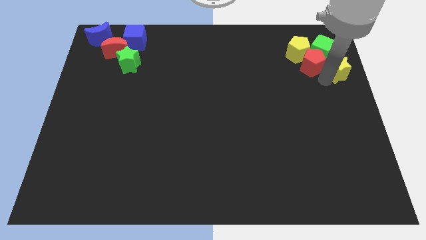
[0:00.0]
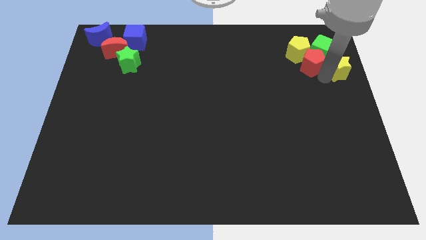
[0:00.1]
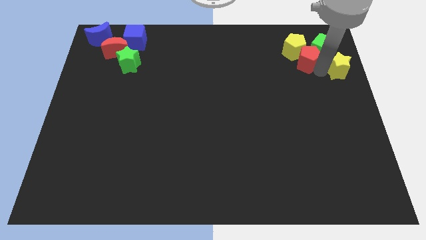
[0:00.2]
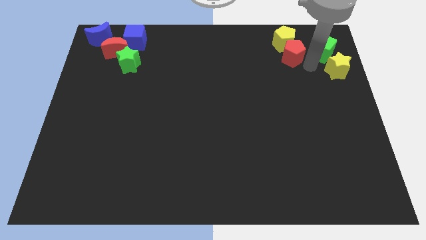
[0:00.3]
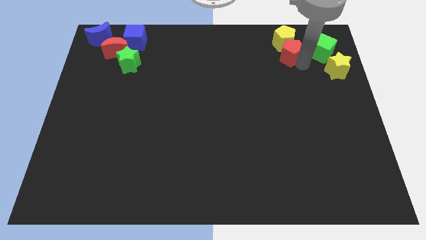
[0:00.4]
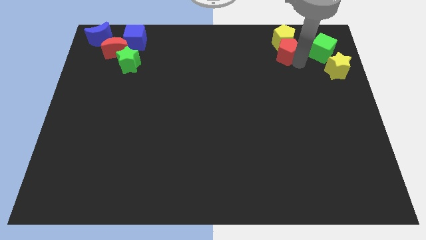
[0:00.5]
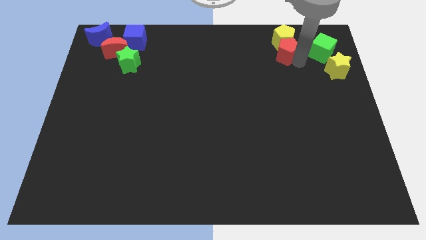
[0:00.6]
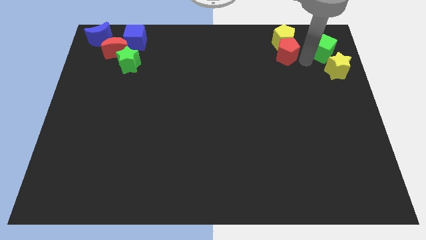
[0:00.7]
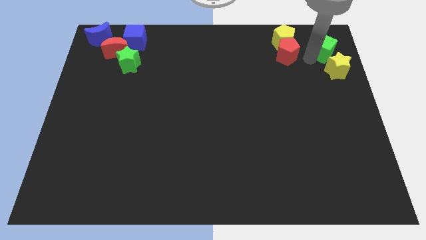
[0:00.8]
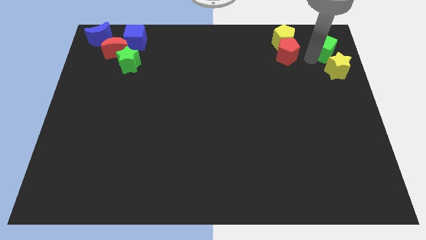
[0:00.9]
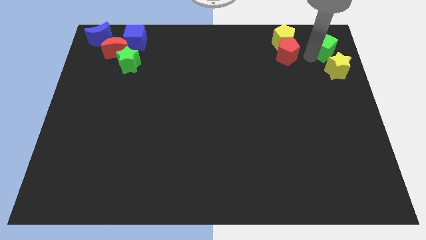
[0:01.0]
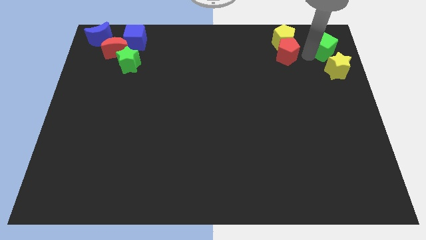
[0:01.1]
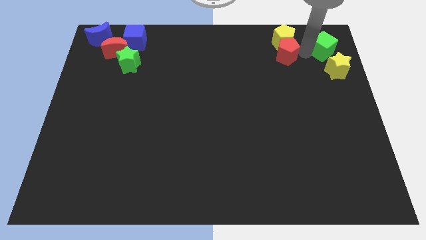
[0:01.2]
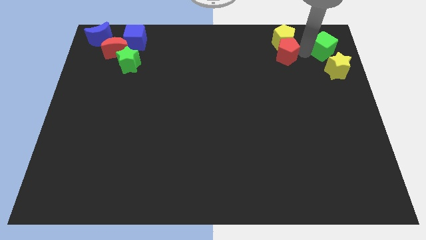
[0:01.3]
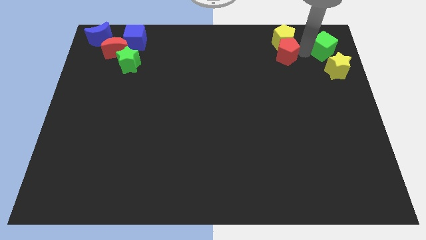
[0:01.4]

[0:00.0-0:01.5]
push red and yellow pentagon towards up

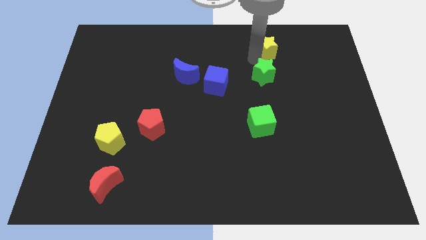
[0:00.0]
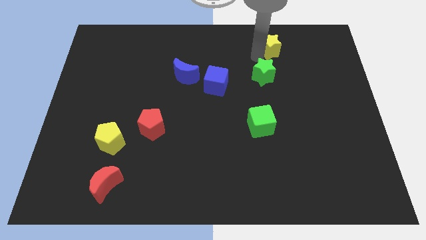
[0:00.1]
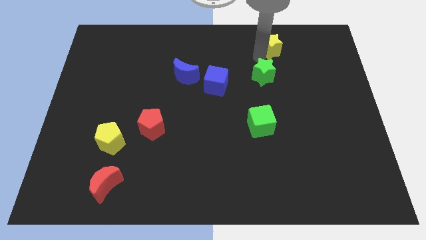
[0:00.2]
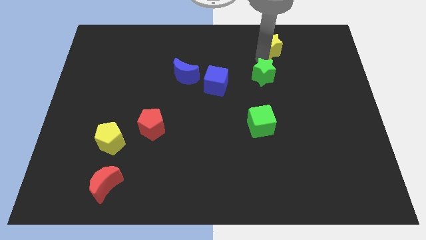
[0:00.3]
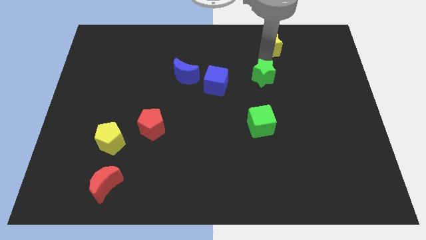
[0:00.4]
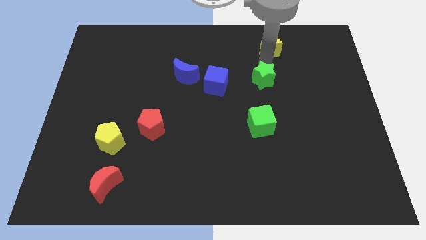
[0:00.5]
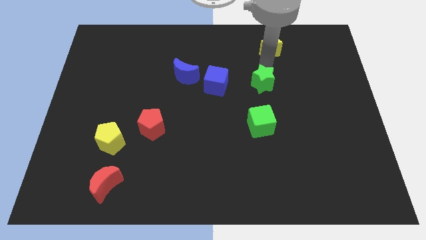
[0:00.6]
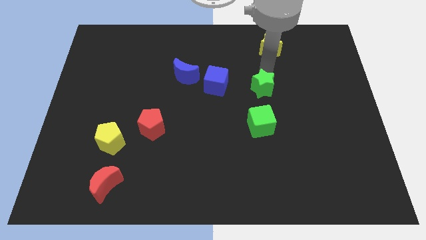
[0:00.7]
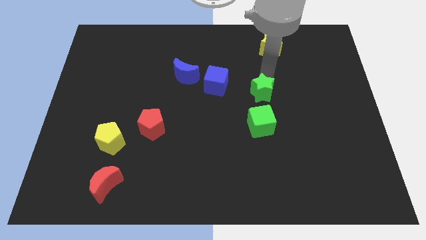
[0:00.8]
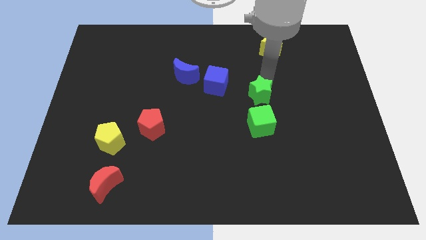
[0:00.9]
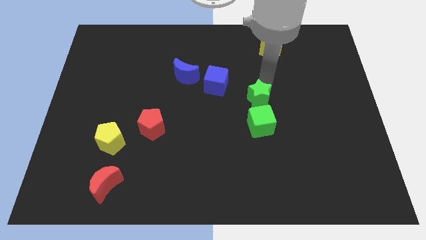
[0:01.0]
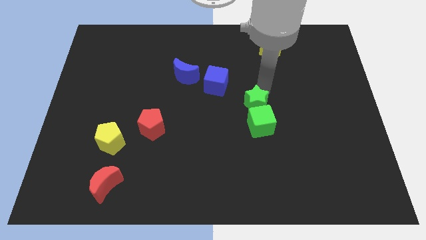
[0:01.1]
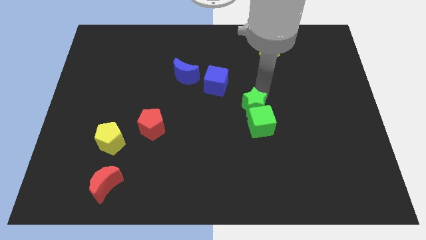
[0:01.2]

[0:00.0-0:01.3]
separate the yellow and green stars

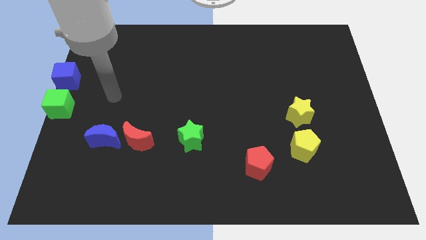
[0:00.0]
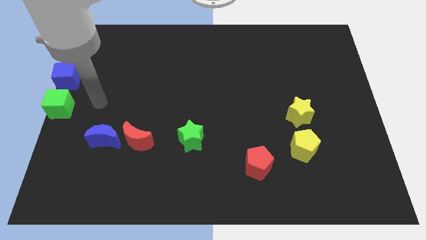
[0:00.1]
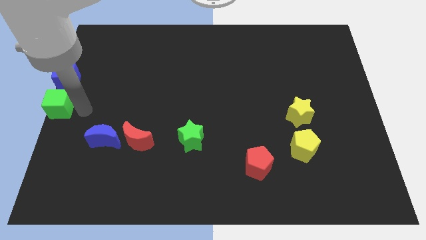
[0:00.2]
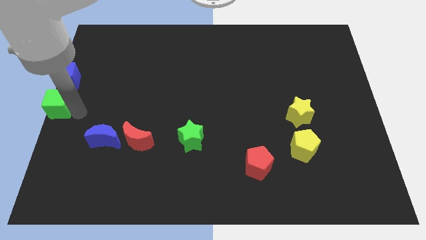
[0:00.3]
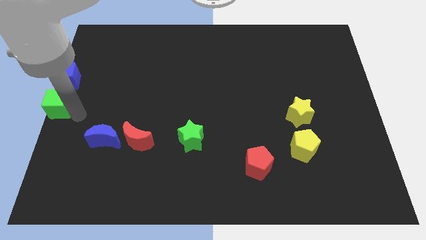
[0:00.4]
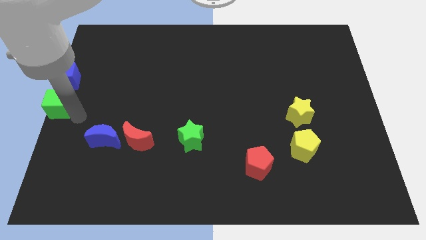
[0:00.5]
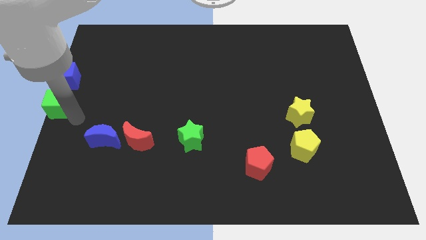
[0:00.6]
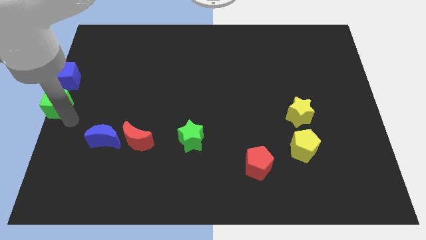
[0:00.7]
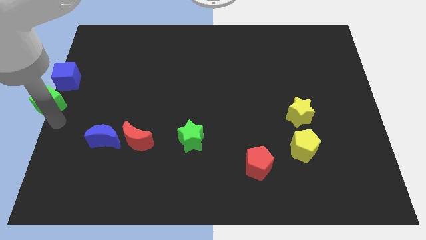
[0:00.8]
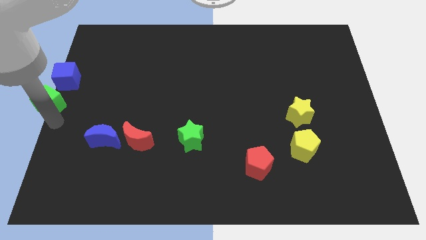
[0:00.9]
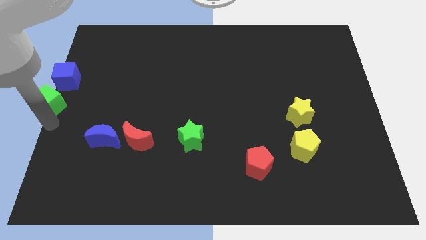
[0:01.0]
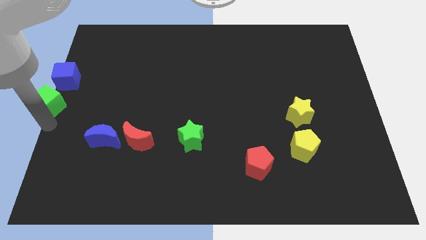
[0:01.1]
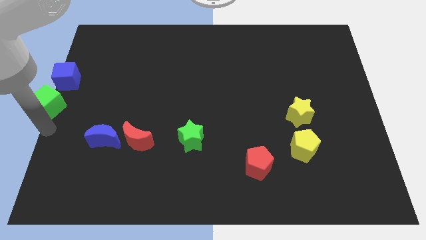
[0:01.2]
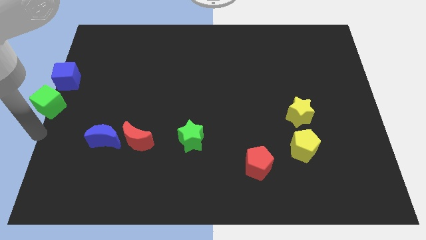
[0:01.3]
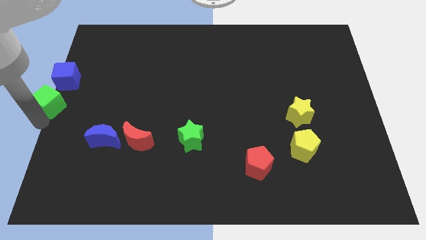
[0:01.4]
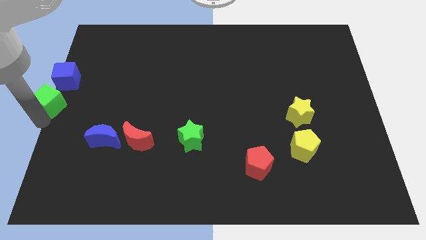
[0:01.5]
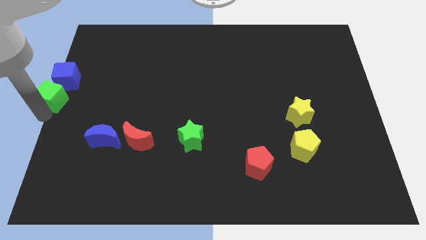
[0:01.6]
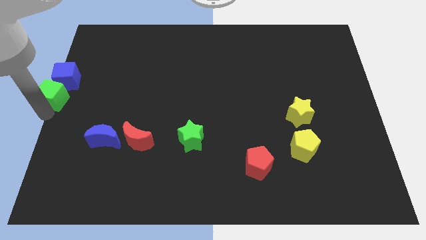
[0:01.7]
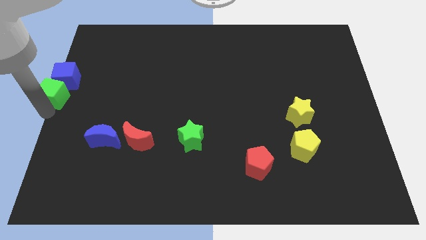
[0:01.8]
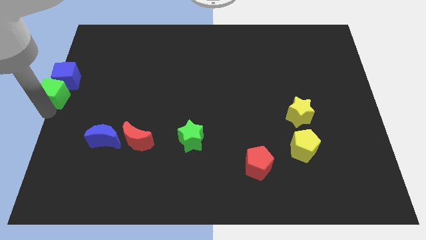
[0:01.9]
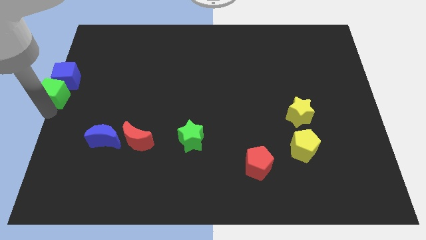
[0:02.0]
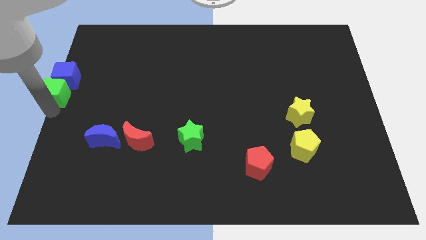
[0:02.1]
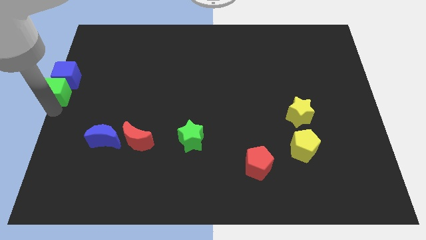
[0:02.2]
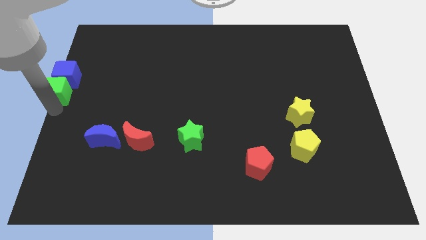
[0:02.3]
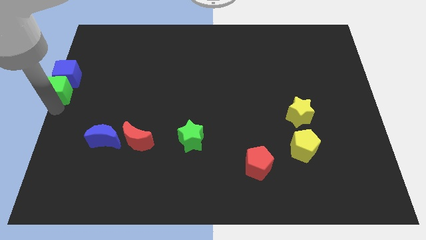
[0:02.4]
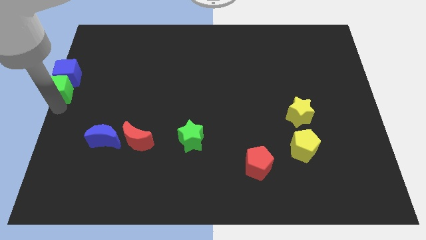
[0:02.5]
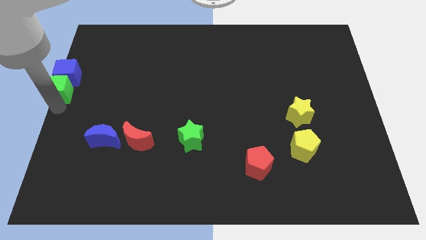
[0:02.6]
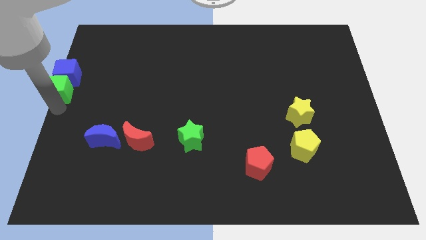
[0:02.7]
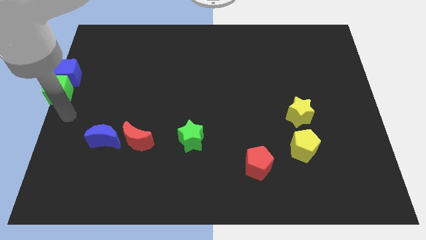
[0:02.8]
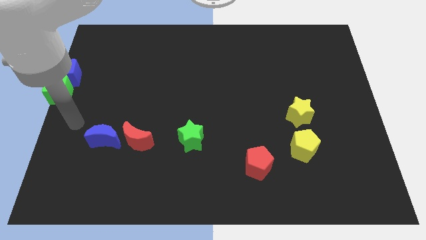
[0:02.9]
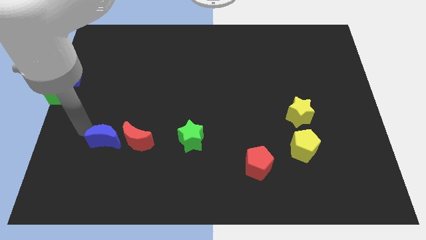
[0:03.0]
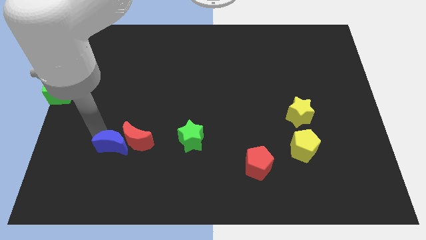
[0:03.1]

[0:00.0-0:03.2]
push the green cube into the blue cube

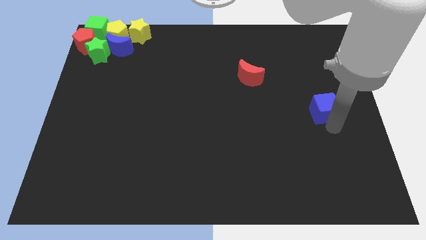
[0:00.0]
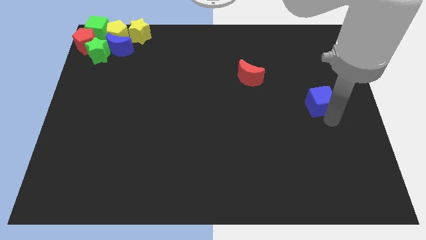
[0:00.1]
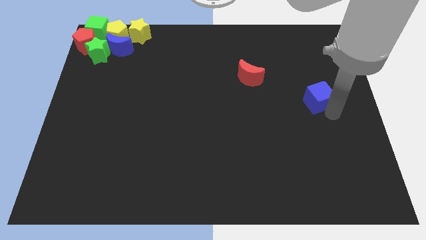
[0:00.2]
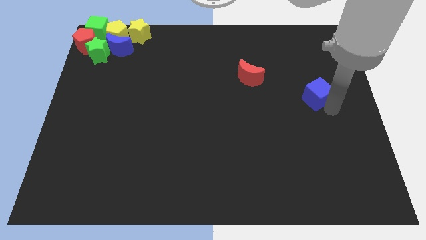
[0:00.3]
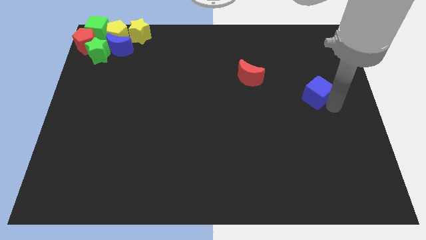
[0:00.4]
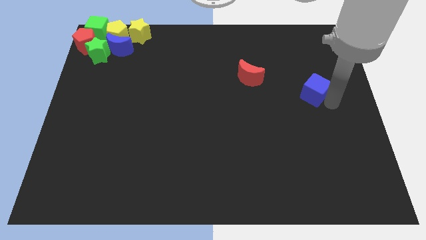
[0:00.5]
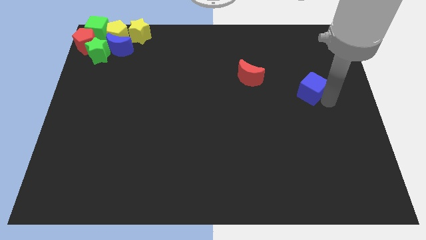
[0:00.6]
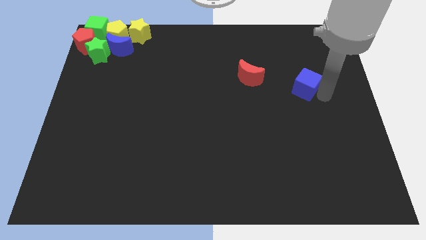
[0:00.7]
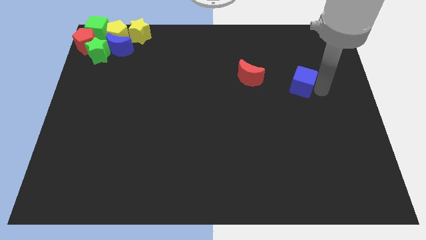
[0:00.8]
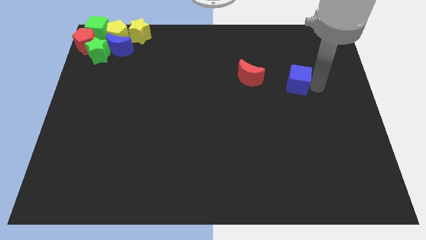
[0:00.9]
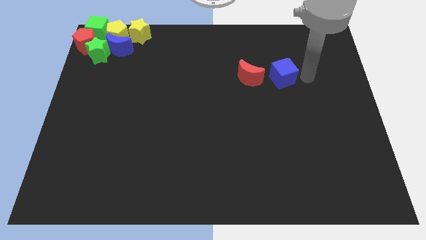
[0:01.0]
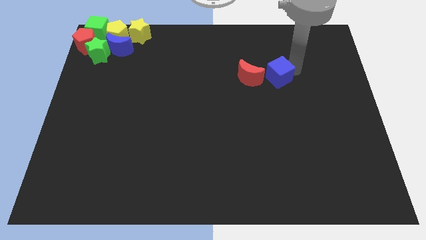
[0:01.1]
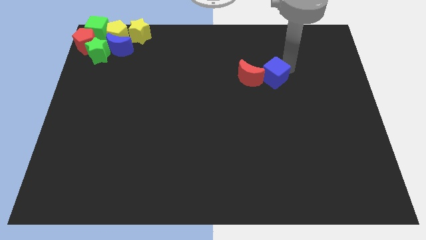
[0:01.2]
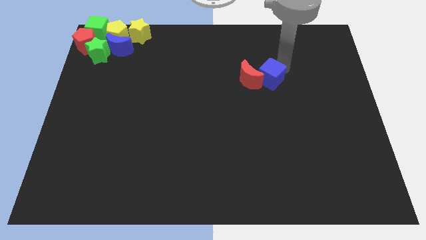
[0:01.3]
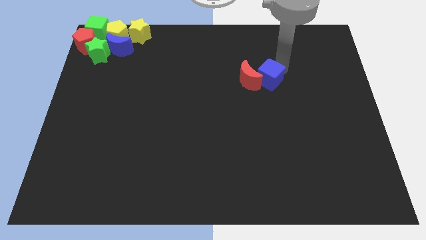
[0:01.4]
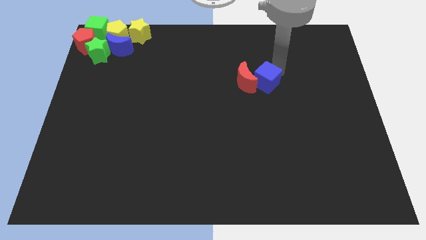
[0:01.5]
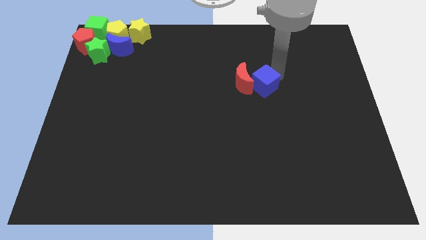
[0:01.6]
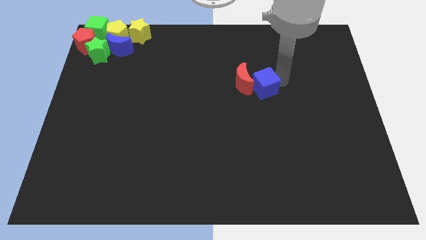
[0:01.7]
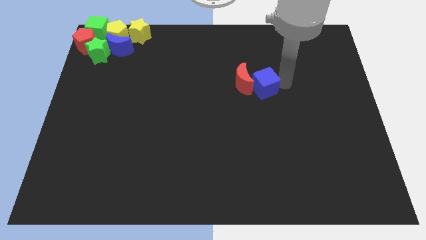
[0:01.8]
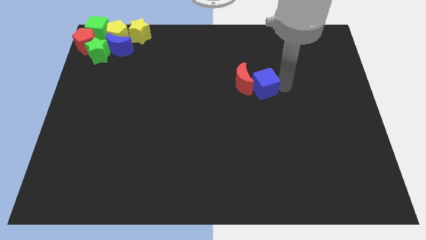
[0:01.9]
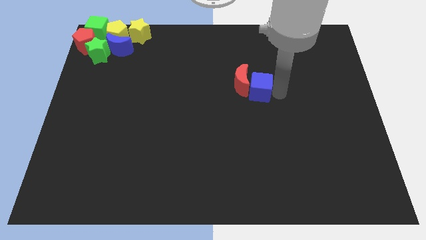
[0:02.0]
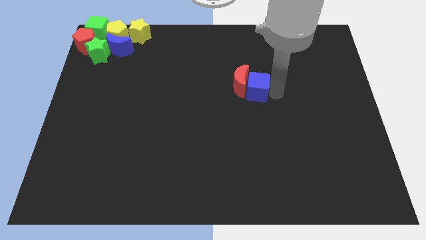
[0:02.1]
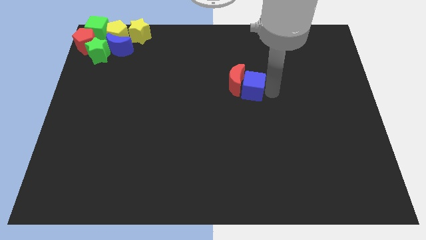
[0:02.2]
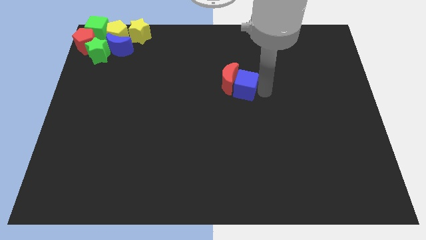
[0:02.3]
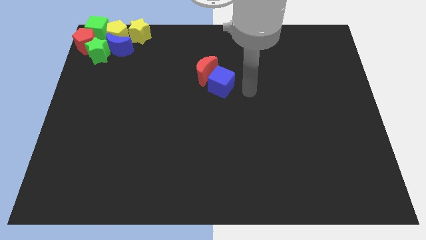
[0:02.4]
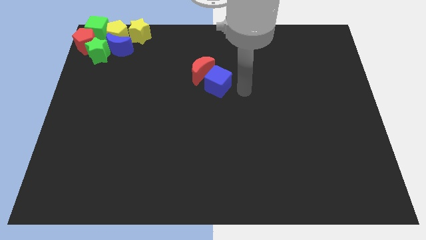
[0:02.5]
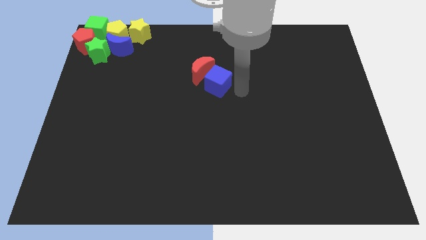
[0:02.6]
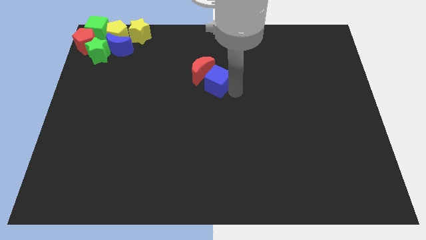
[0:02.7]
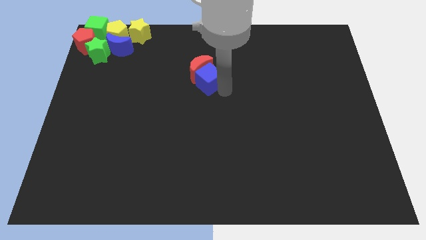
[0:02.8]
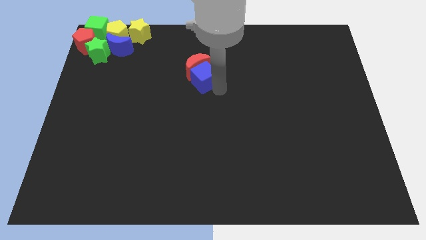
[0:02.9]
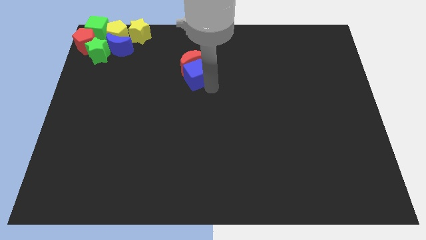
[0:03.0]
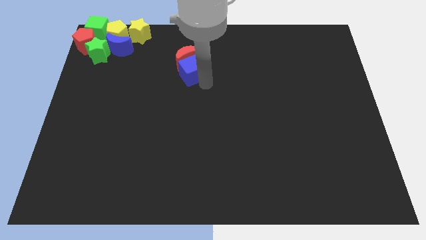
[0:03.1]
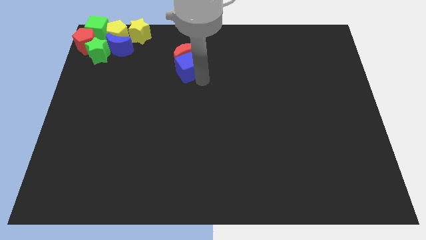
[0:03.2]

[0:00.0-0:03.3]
move blue cube and red moon to the left above cube

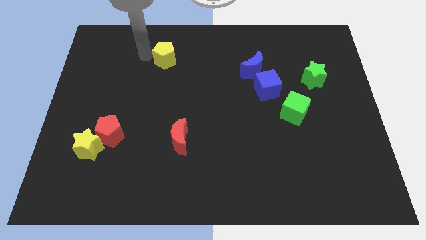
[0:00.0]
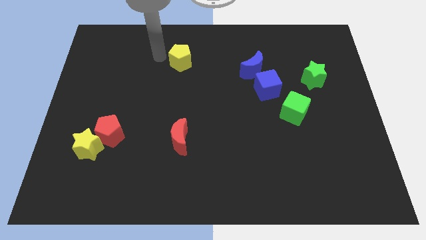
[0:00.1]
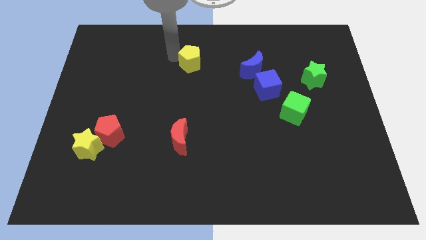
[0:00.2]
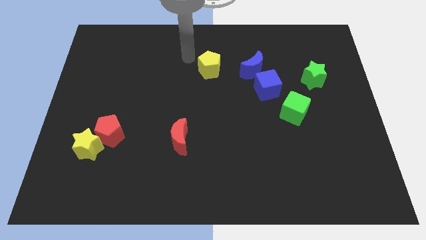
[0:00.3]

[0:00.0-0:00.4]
move the yellow pentagon top center of the board
